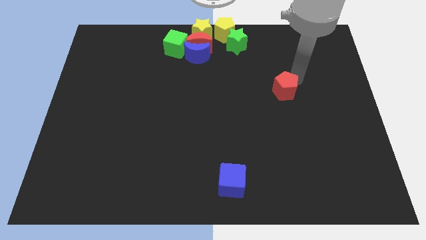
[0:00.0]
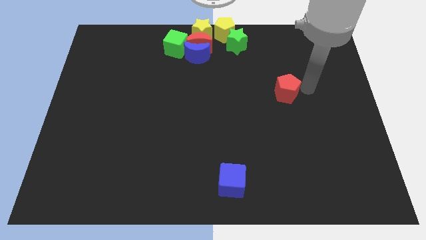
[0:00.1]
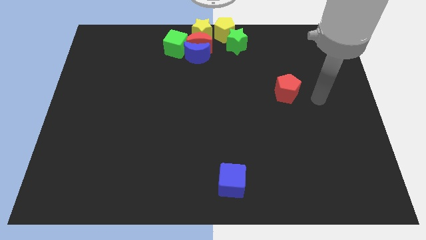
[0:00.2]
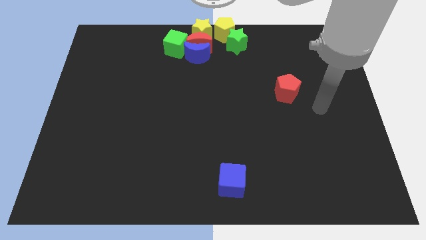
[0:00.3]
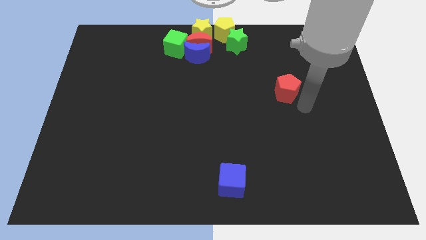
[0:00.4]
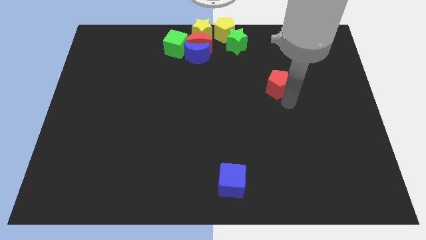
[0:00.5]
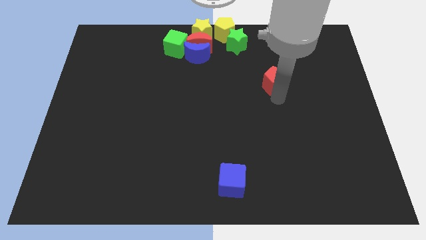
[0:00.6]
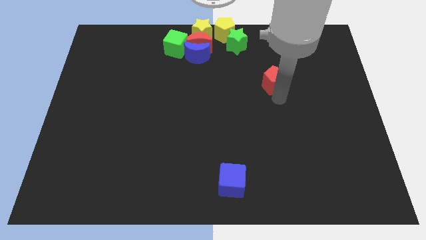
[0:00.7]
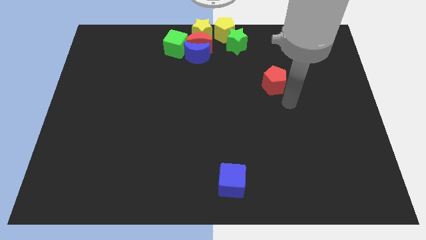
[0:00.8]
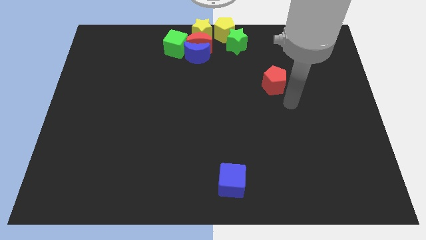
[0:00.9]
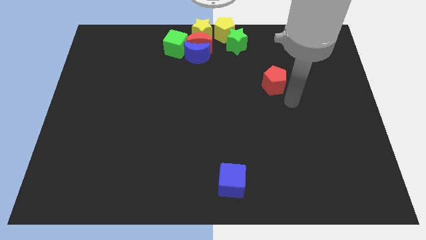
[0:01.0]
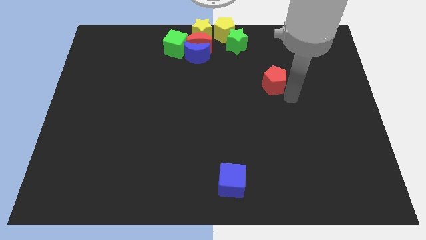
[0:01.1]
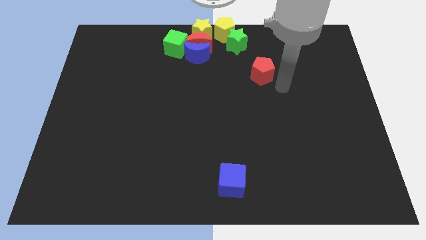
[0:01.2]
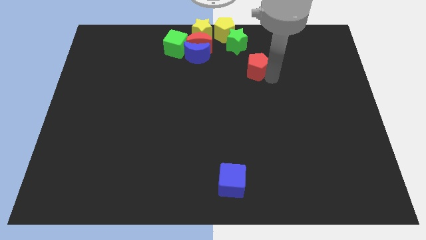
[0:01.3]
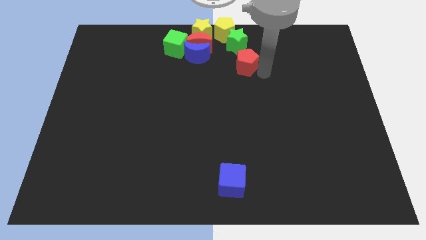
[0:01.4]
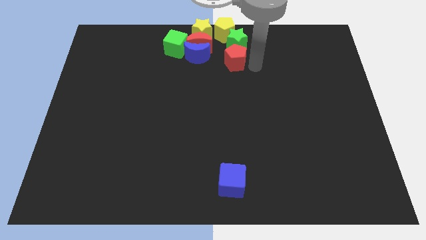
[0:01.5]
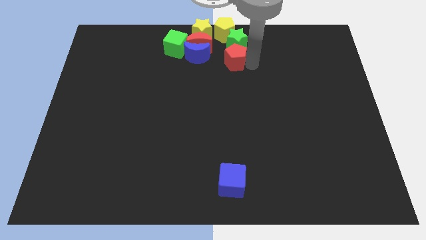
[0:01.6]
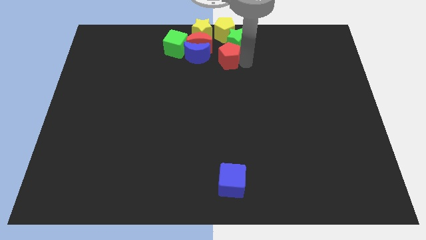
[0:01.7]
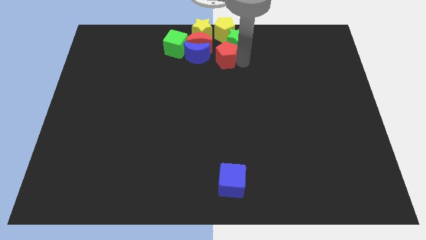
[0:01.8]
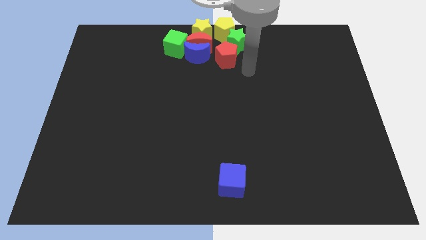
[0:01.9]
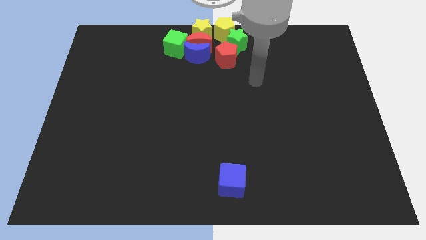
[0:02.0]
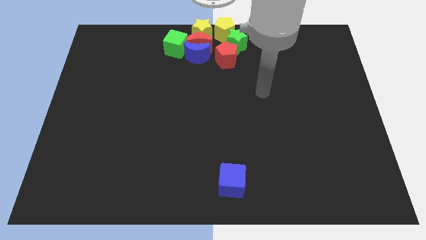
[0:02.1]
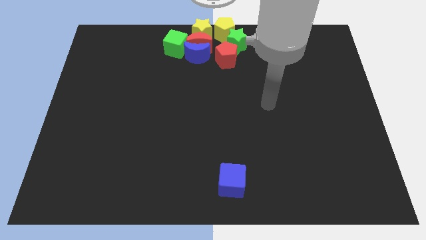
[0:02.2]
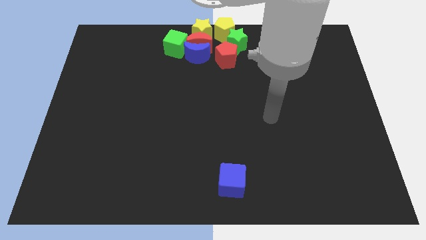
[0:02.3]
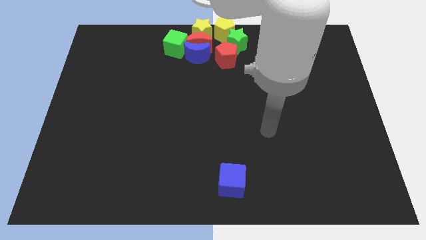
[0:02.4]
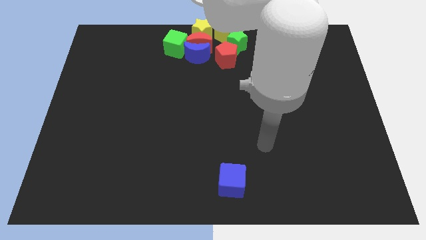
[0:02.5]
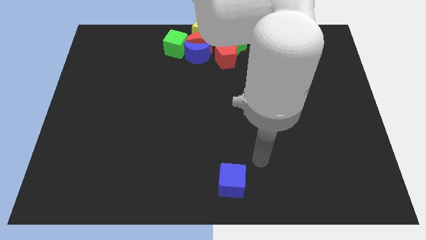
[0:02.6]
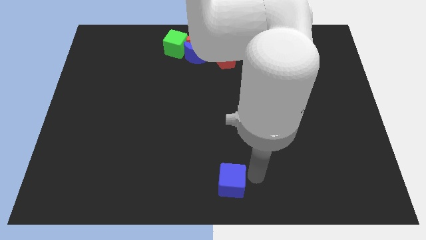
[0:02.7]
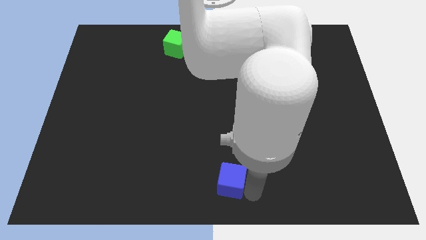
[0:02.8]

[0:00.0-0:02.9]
place the red pentagon right to the blue crescent

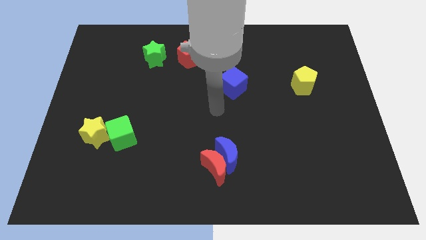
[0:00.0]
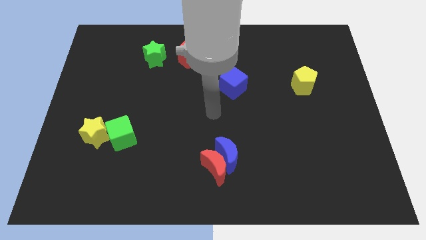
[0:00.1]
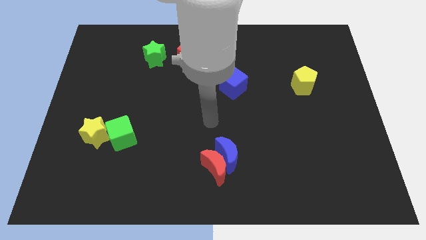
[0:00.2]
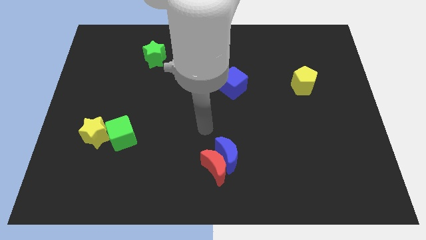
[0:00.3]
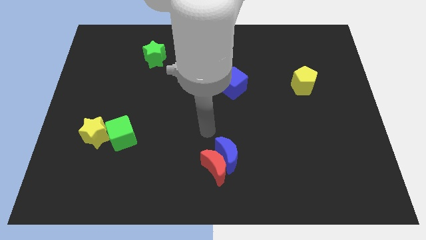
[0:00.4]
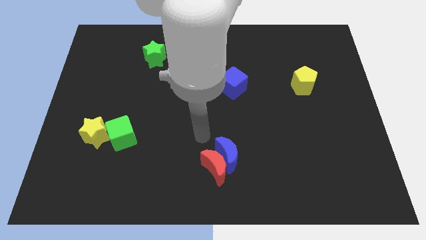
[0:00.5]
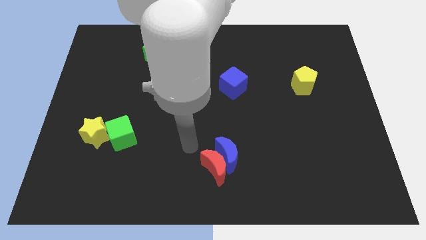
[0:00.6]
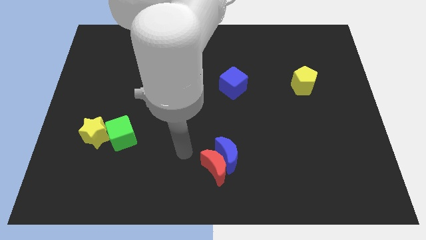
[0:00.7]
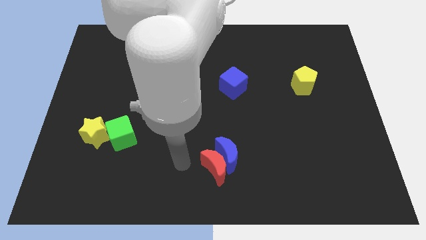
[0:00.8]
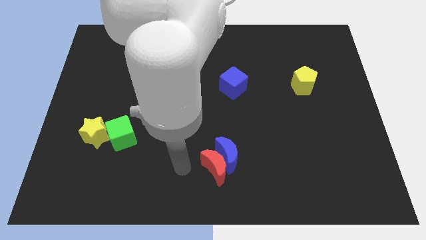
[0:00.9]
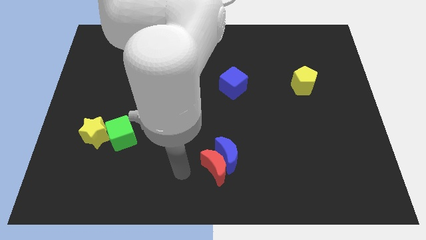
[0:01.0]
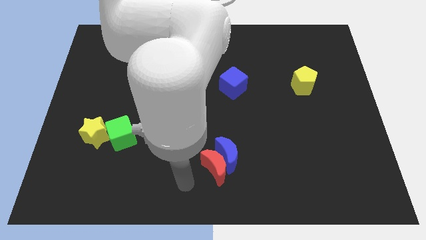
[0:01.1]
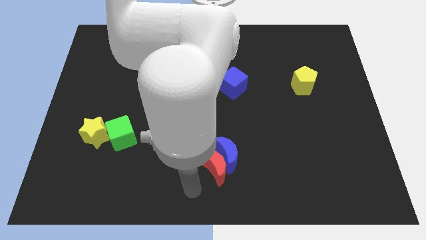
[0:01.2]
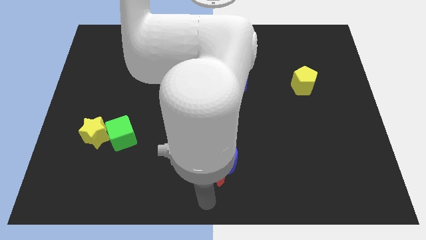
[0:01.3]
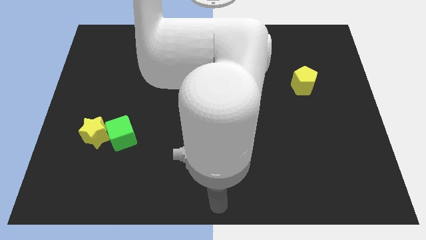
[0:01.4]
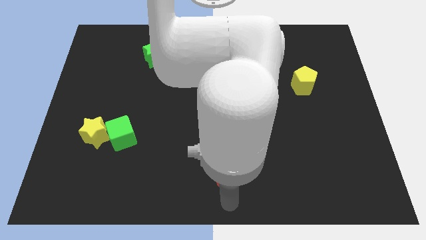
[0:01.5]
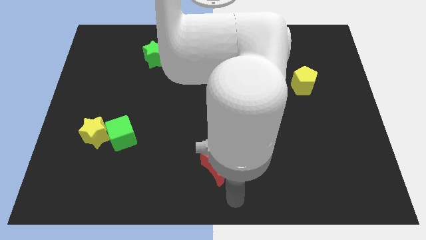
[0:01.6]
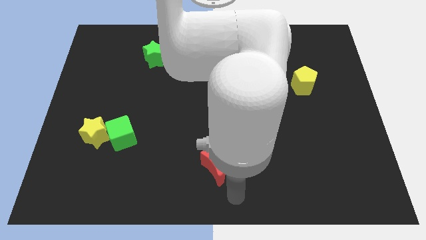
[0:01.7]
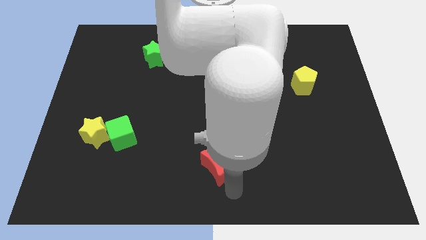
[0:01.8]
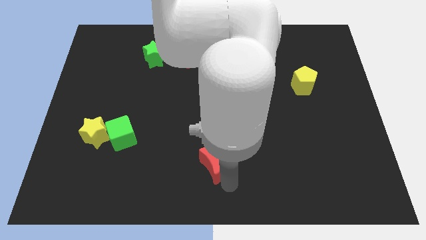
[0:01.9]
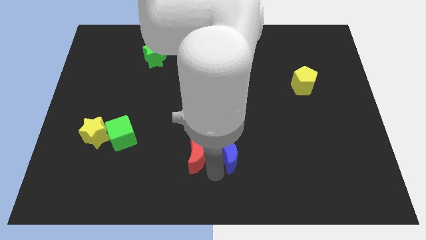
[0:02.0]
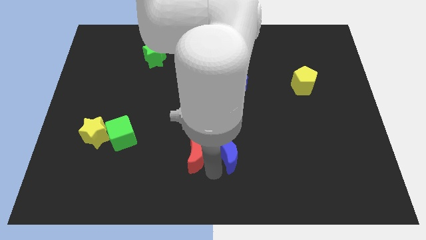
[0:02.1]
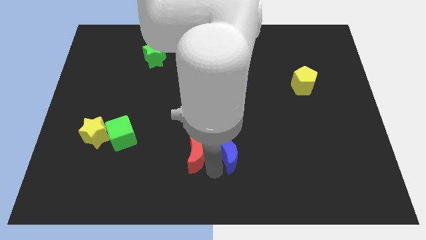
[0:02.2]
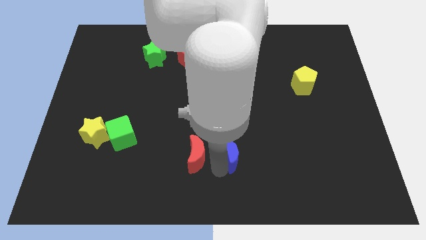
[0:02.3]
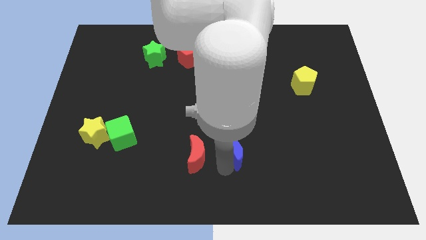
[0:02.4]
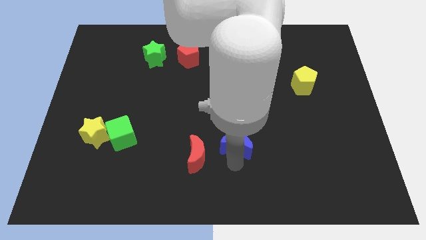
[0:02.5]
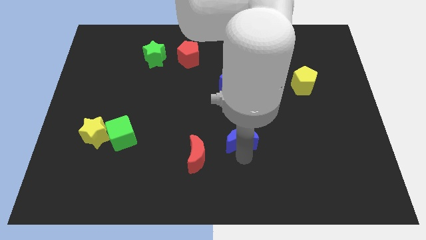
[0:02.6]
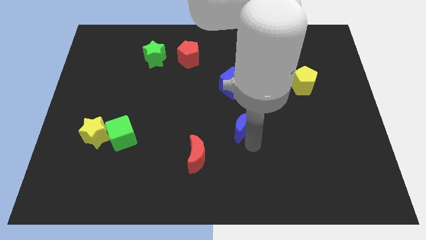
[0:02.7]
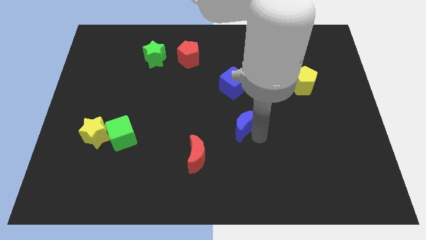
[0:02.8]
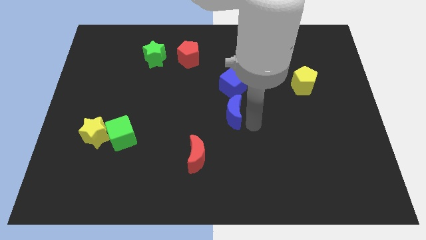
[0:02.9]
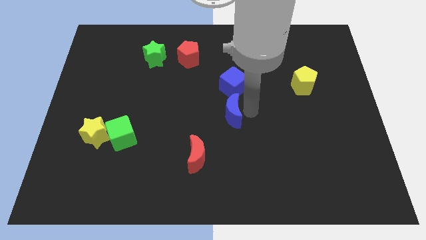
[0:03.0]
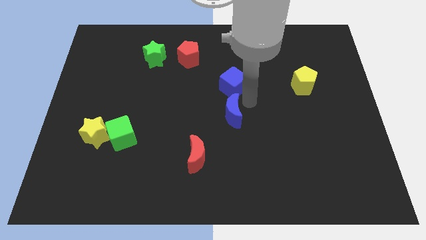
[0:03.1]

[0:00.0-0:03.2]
separate the blue moon from the red moon

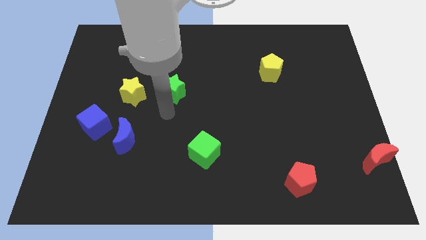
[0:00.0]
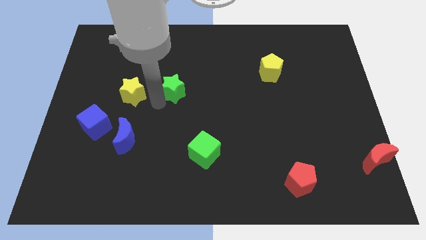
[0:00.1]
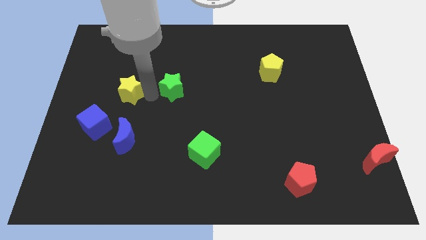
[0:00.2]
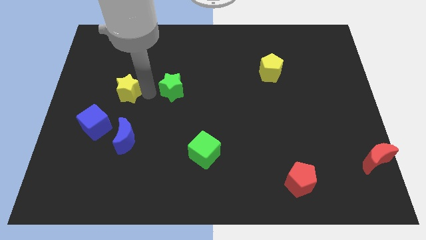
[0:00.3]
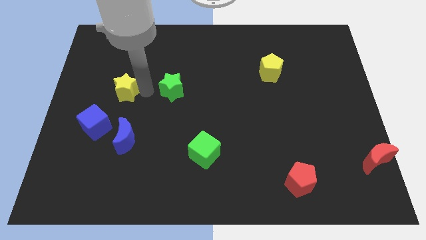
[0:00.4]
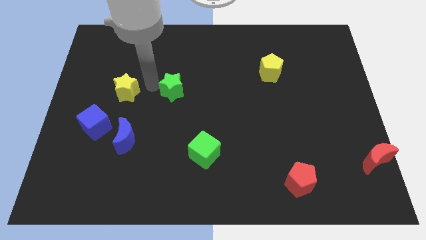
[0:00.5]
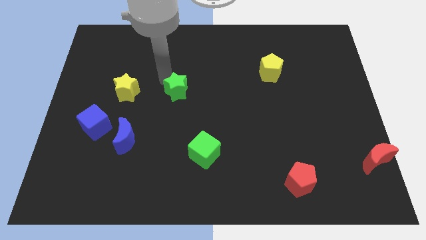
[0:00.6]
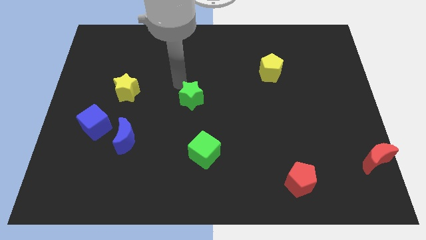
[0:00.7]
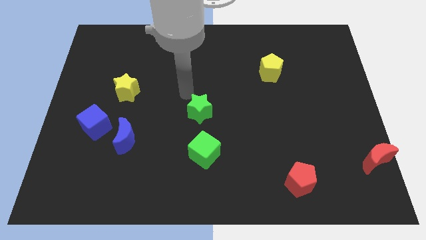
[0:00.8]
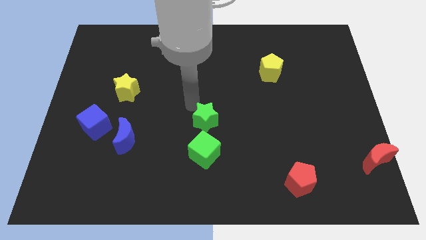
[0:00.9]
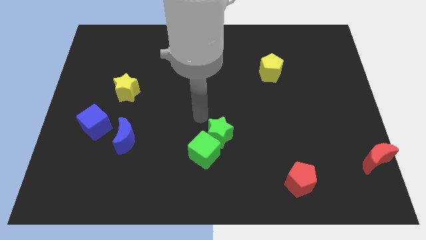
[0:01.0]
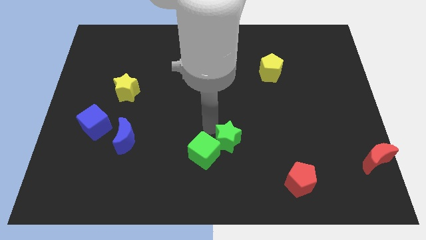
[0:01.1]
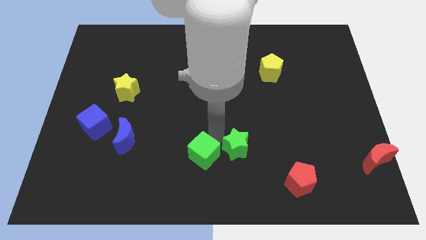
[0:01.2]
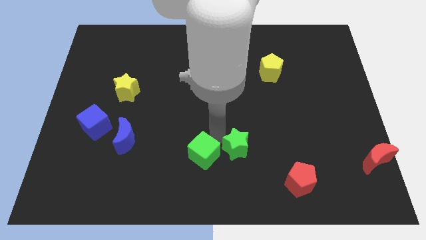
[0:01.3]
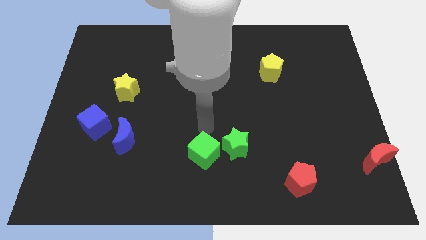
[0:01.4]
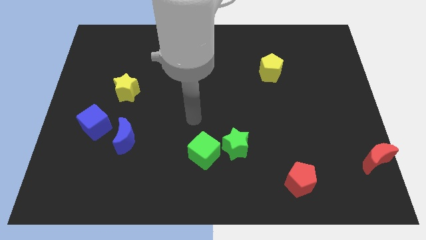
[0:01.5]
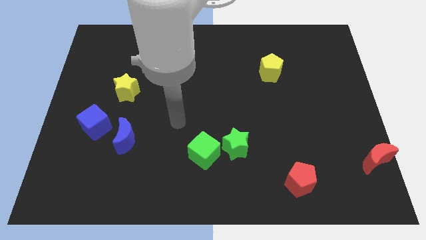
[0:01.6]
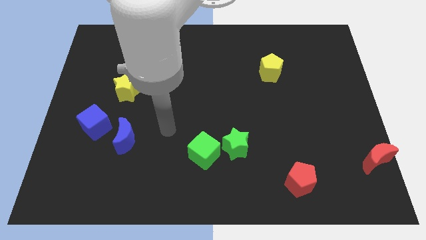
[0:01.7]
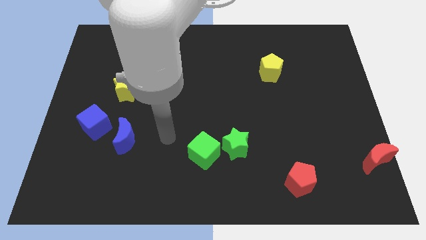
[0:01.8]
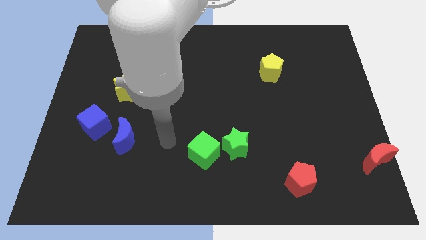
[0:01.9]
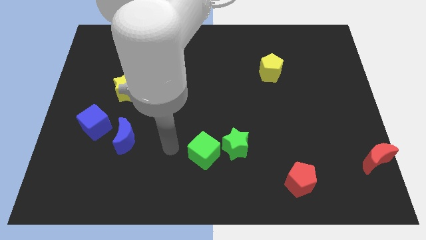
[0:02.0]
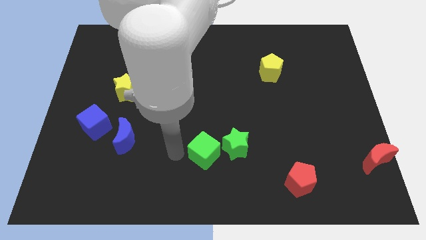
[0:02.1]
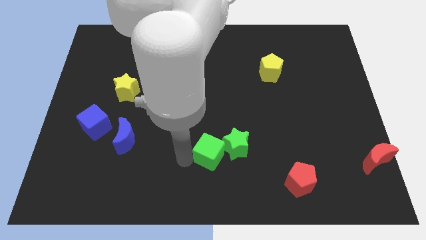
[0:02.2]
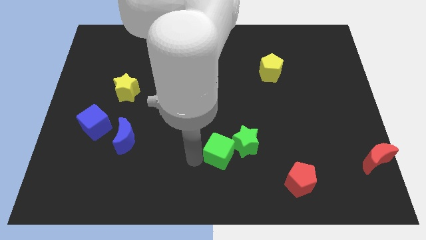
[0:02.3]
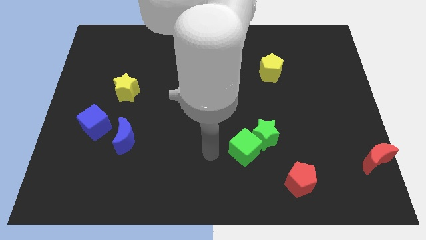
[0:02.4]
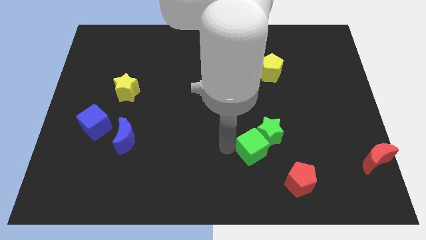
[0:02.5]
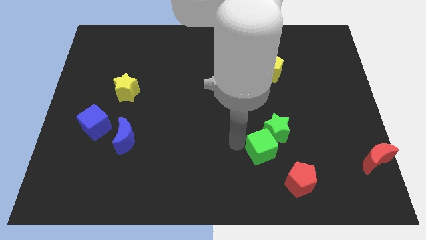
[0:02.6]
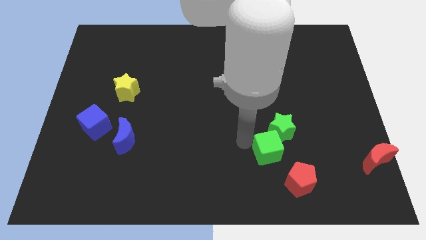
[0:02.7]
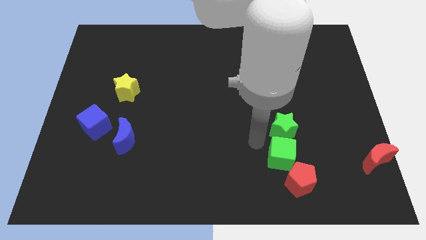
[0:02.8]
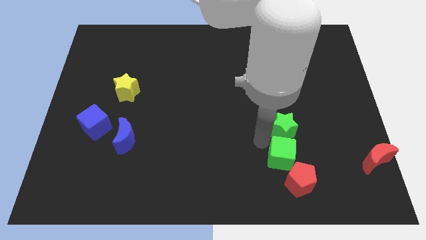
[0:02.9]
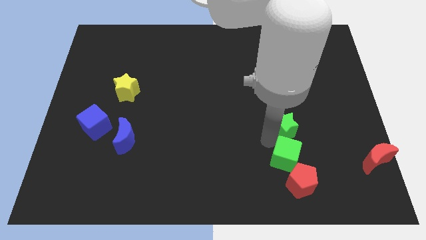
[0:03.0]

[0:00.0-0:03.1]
put the green blocks in a vertical line at the top side of the red pentagon
